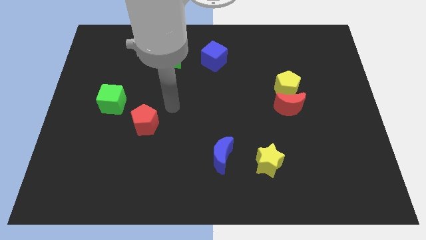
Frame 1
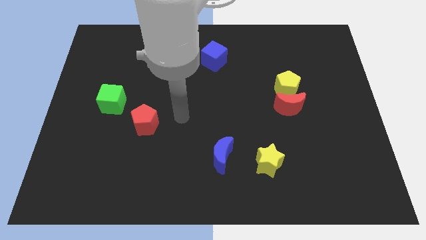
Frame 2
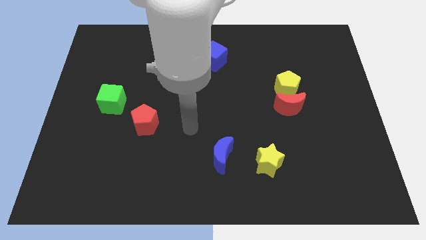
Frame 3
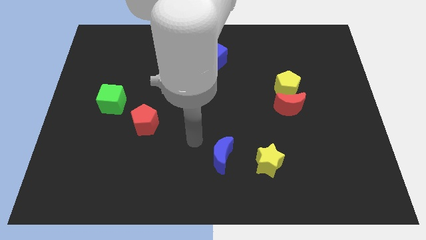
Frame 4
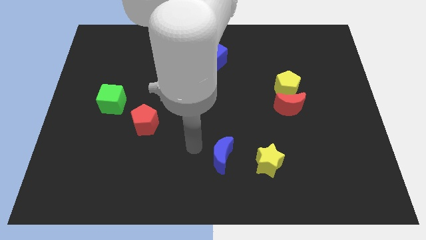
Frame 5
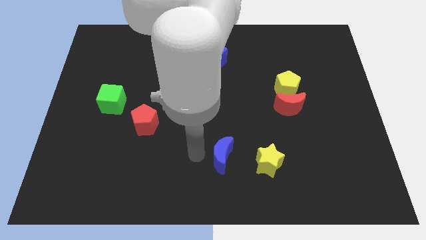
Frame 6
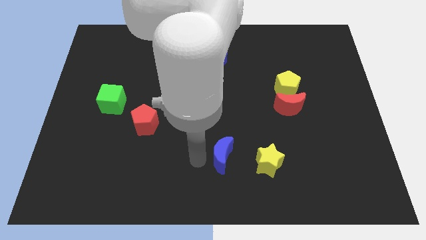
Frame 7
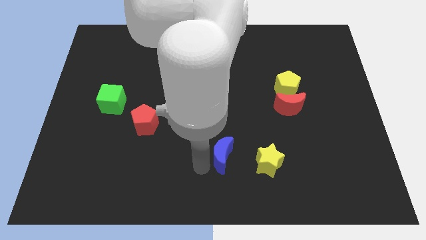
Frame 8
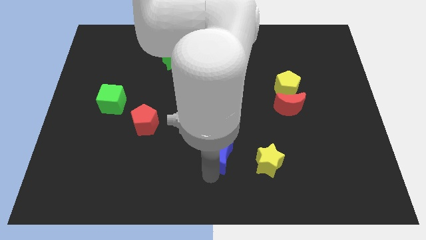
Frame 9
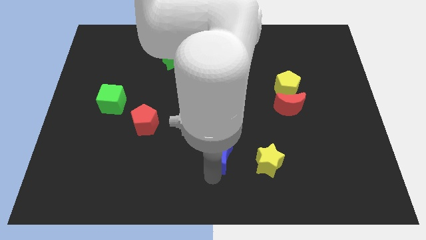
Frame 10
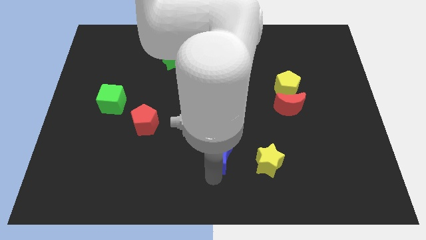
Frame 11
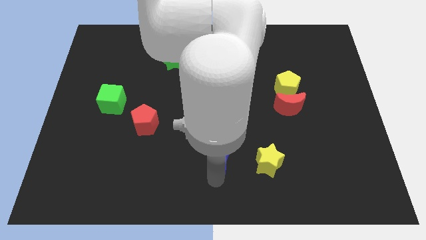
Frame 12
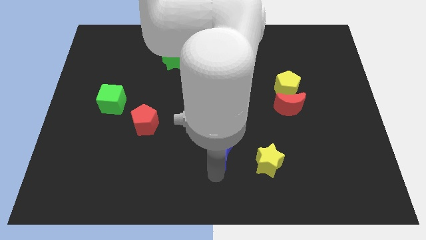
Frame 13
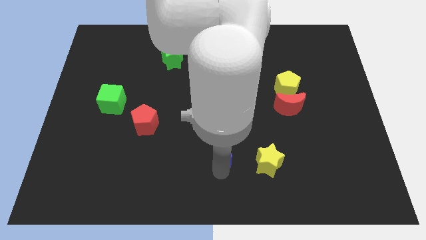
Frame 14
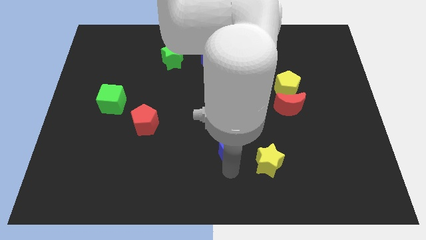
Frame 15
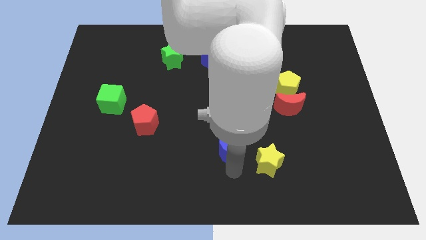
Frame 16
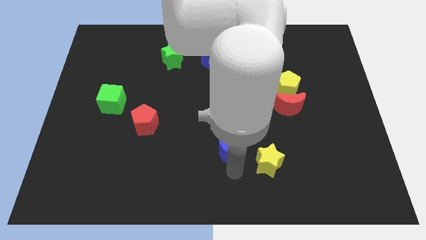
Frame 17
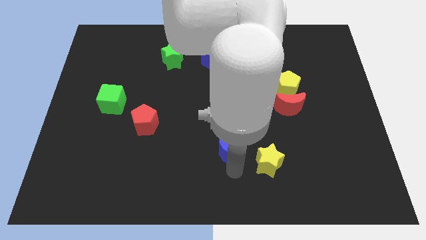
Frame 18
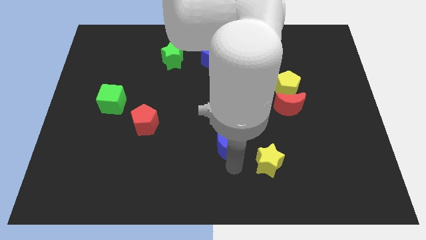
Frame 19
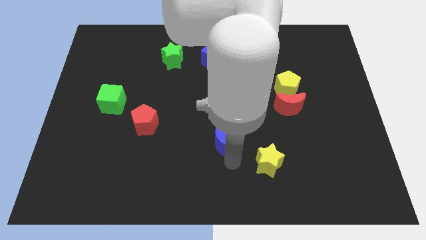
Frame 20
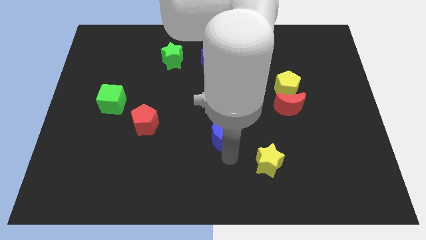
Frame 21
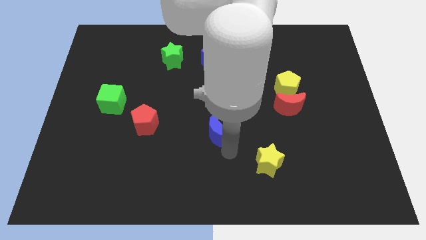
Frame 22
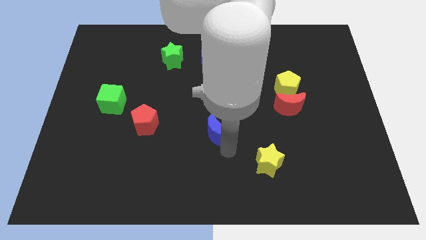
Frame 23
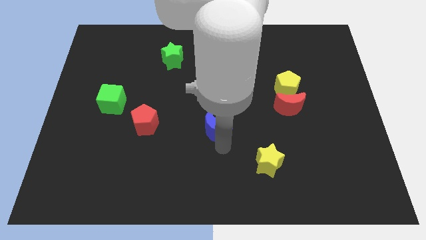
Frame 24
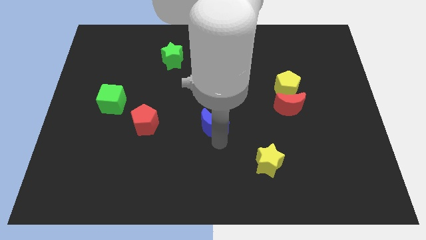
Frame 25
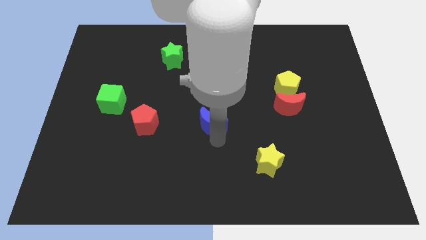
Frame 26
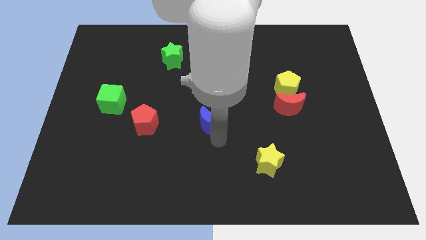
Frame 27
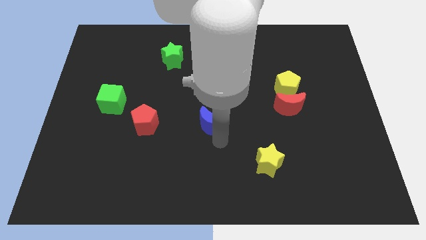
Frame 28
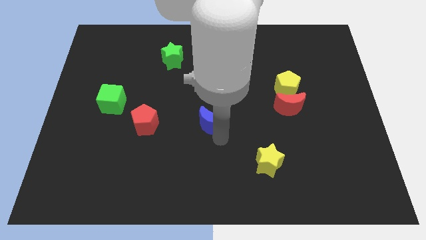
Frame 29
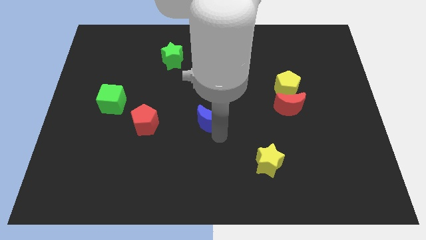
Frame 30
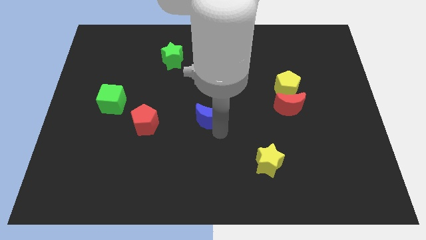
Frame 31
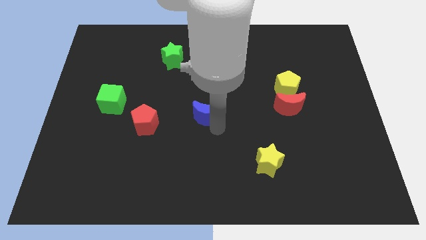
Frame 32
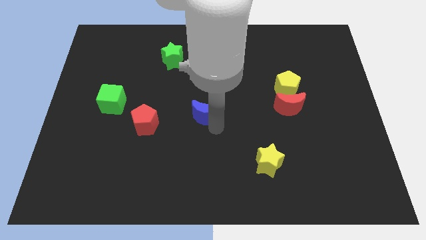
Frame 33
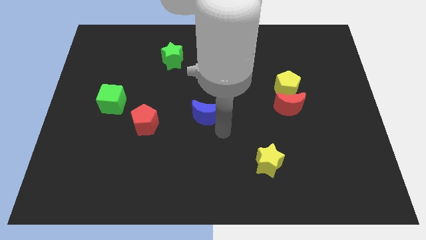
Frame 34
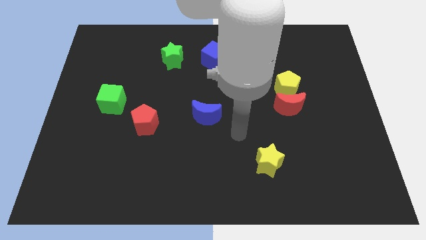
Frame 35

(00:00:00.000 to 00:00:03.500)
move the blue crescent to the center of the board

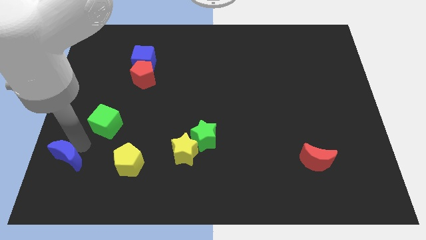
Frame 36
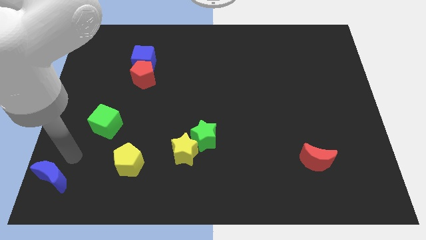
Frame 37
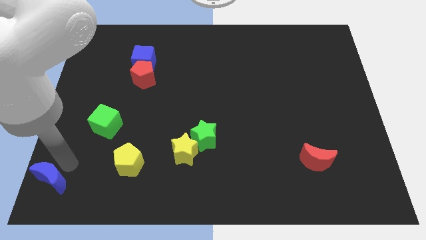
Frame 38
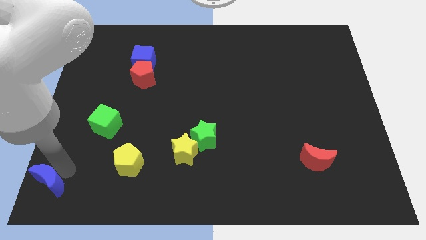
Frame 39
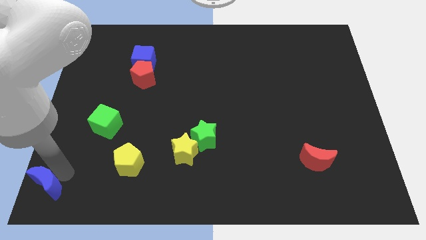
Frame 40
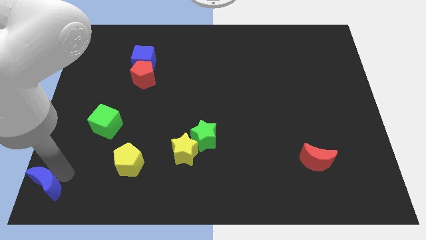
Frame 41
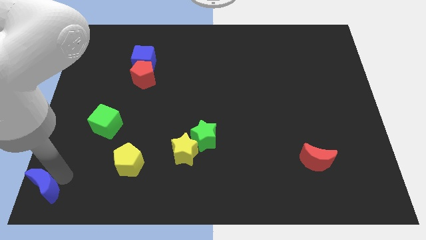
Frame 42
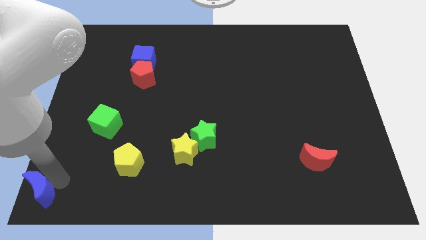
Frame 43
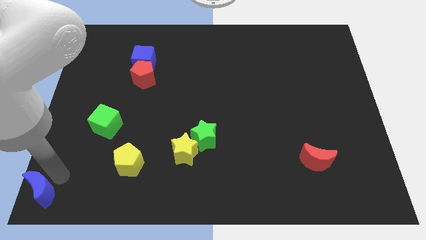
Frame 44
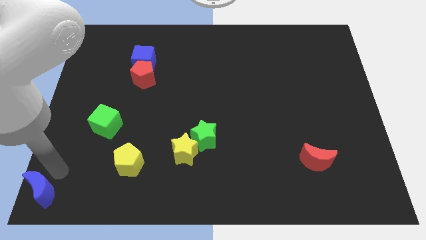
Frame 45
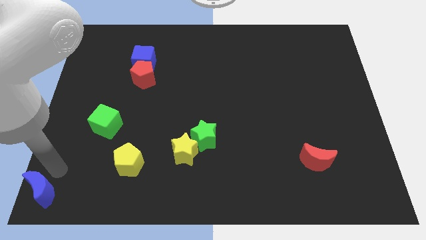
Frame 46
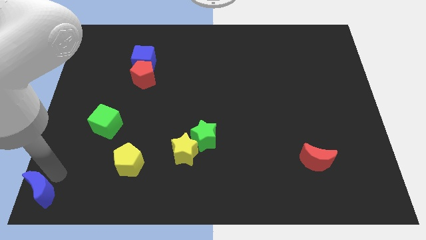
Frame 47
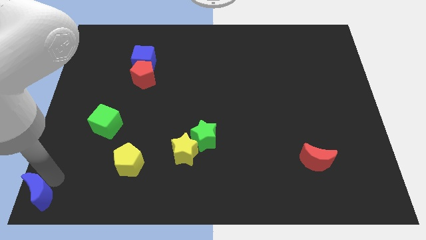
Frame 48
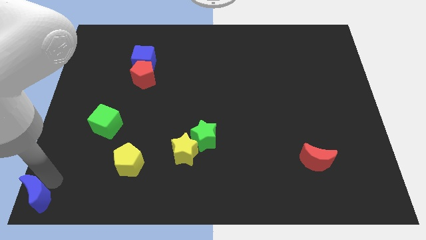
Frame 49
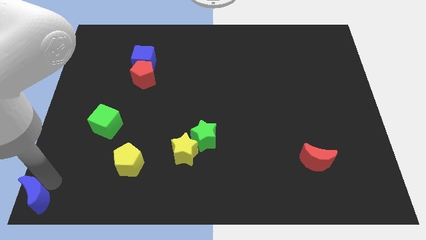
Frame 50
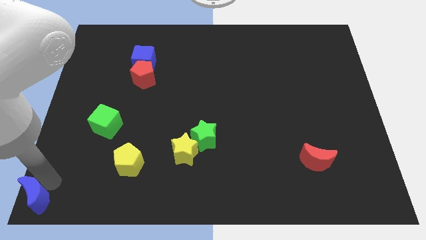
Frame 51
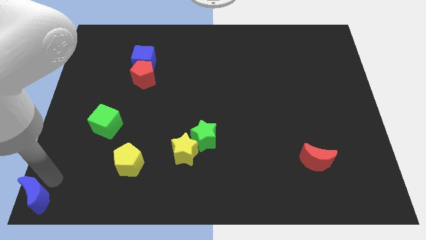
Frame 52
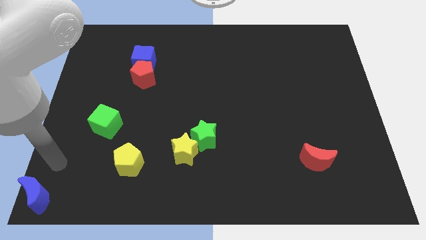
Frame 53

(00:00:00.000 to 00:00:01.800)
place blue moon to bottom left corner

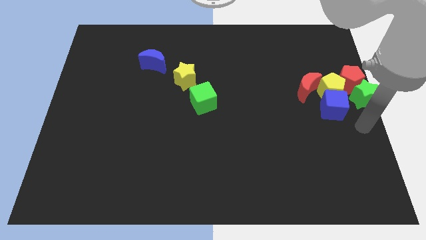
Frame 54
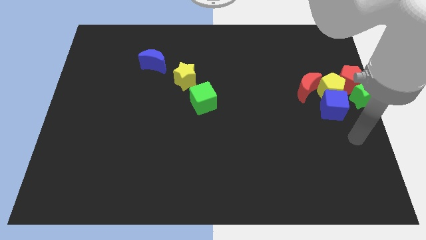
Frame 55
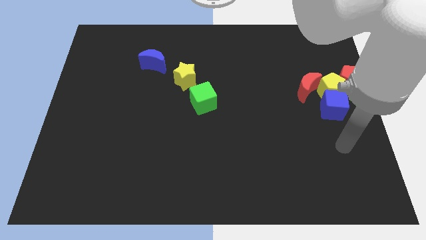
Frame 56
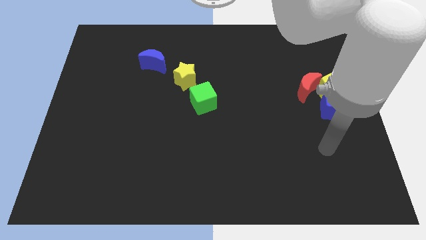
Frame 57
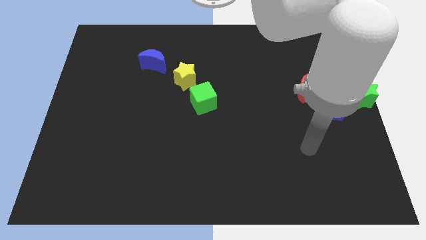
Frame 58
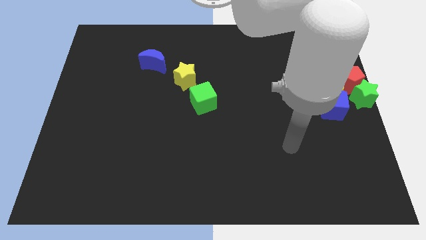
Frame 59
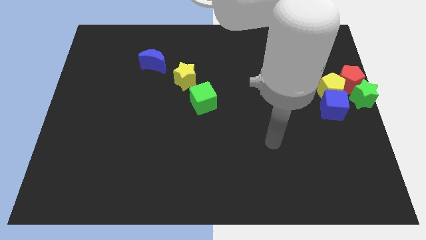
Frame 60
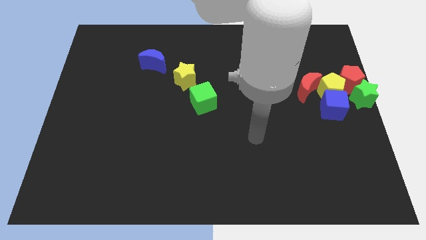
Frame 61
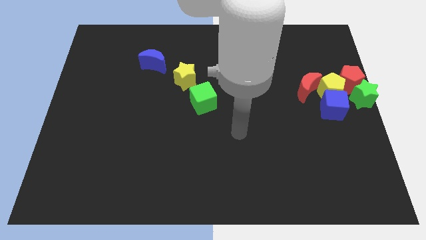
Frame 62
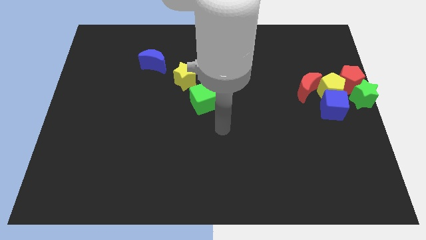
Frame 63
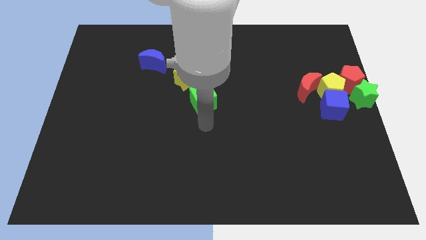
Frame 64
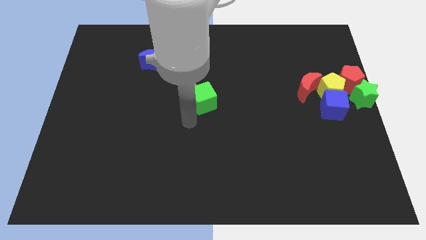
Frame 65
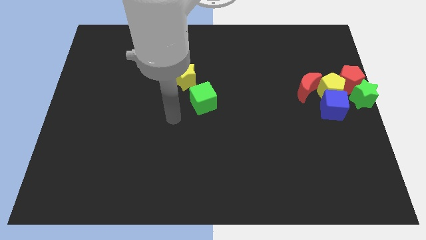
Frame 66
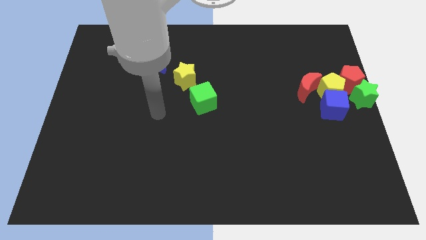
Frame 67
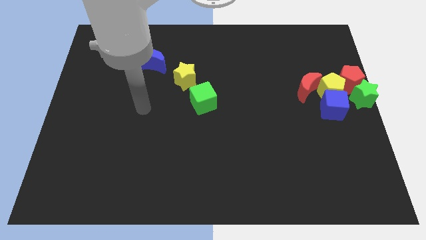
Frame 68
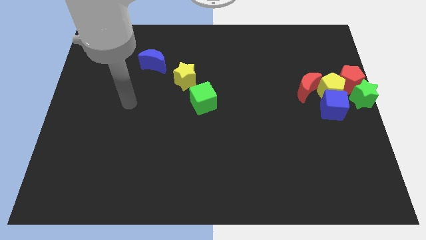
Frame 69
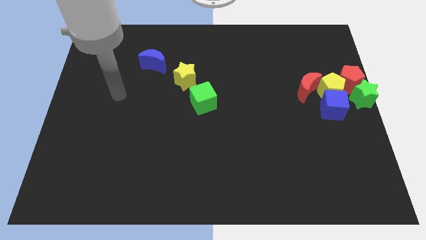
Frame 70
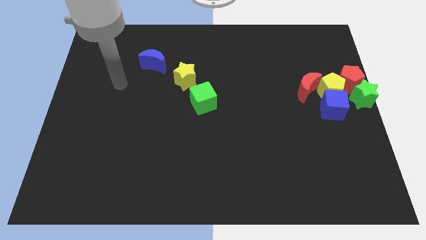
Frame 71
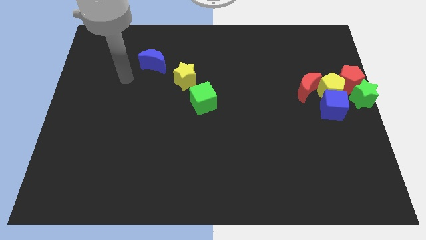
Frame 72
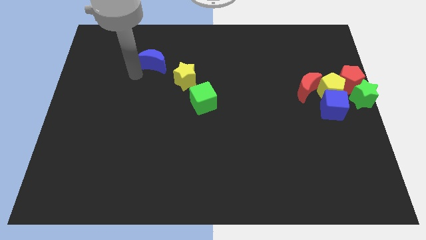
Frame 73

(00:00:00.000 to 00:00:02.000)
place your arm towards the left side of yellow star

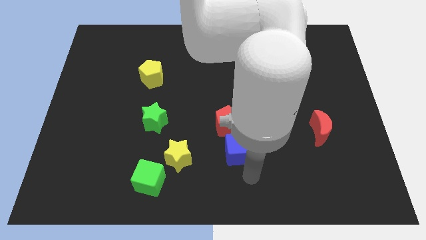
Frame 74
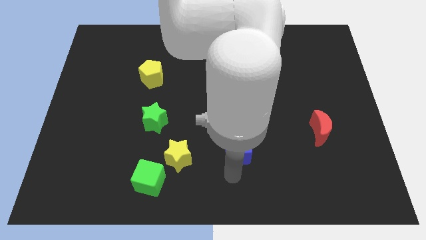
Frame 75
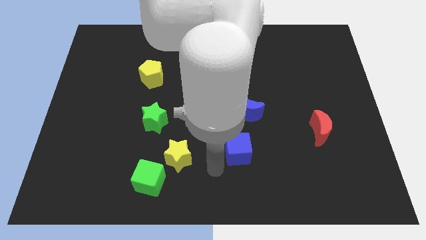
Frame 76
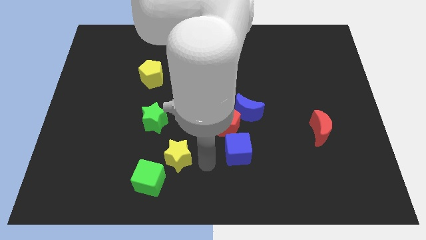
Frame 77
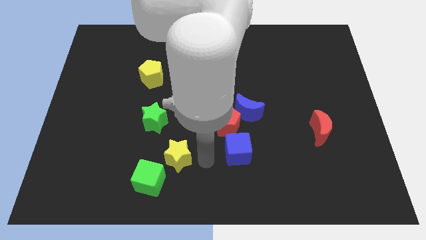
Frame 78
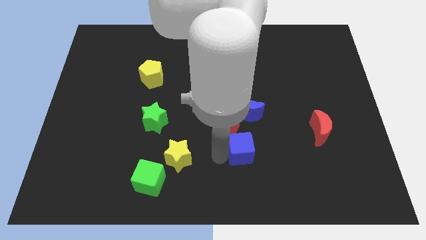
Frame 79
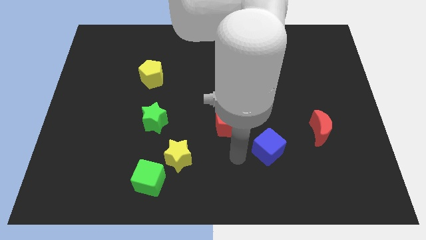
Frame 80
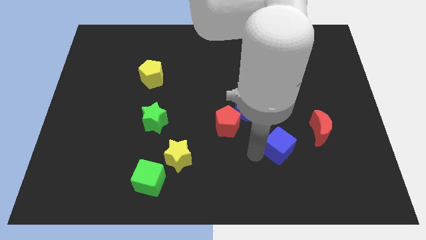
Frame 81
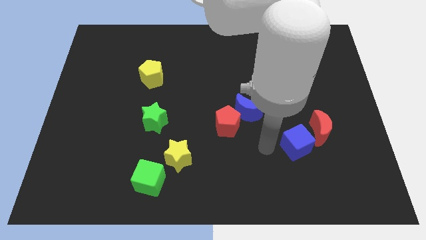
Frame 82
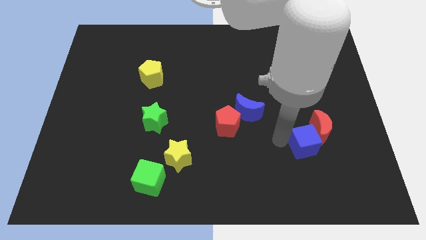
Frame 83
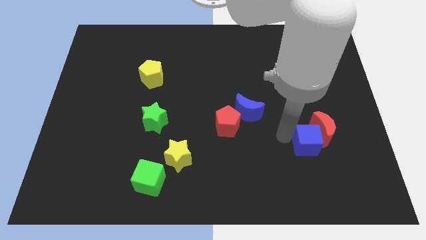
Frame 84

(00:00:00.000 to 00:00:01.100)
slide blue cube close to red moon

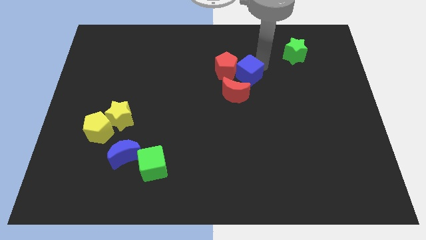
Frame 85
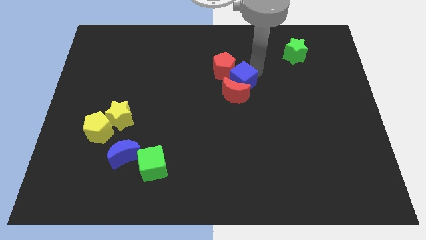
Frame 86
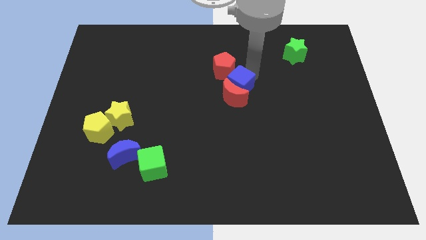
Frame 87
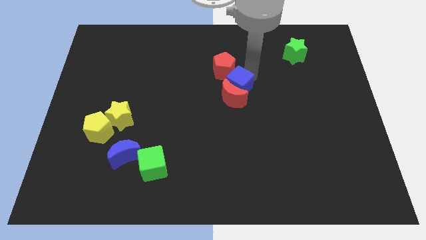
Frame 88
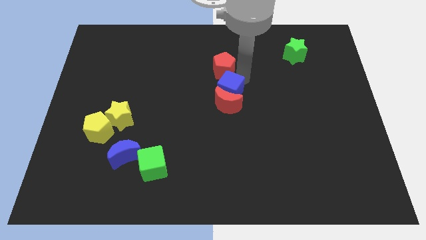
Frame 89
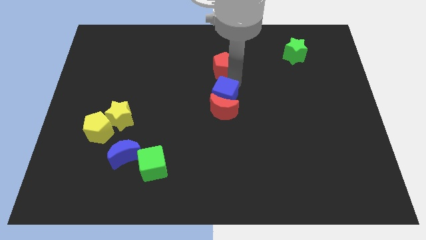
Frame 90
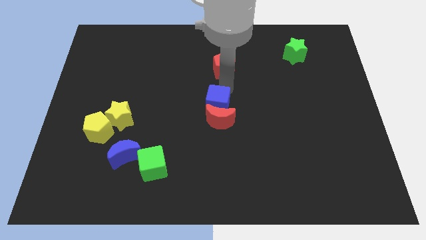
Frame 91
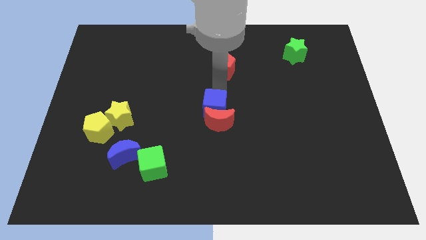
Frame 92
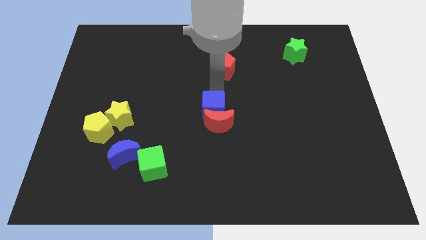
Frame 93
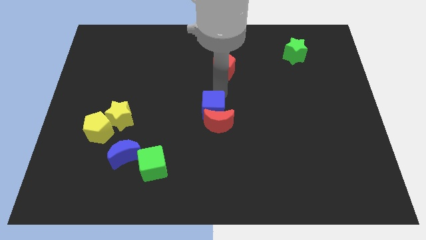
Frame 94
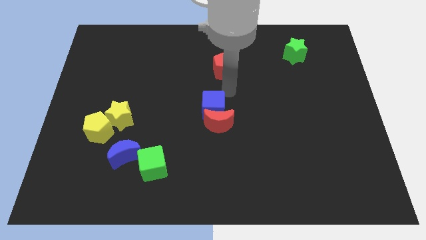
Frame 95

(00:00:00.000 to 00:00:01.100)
separate blue cube and red crescent from red pentagon
